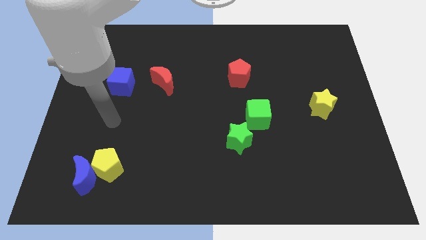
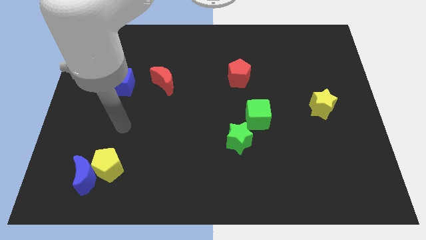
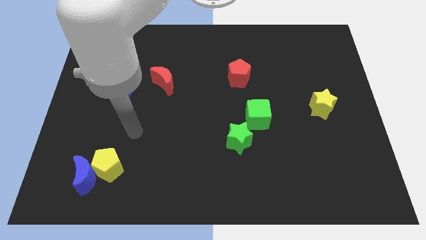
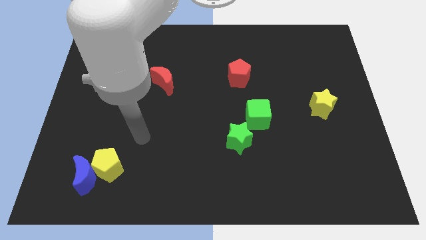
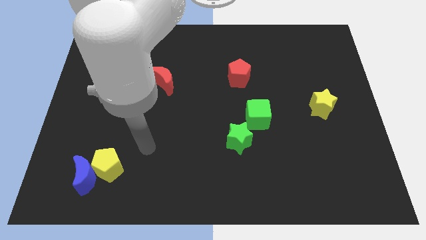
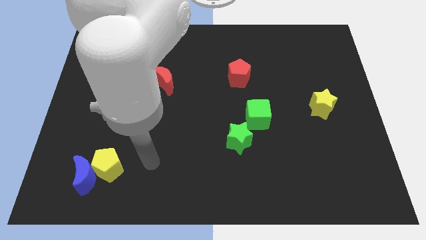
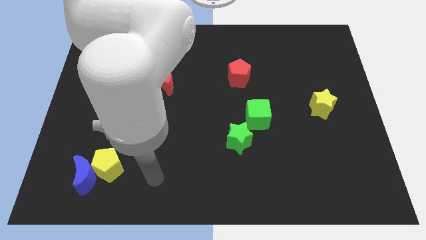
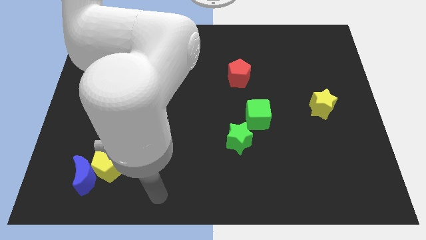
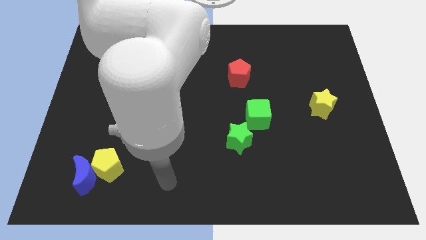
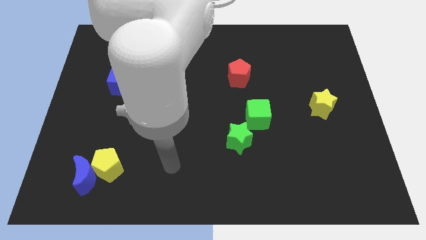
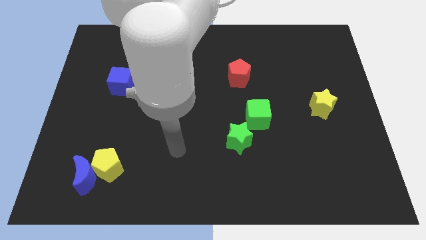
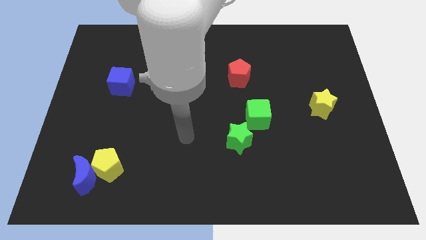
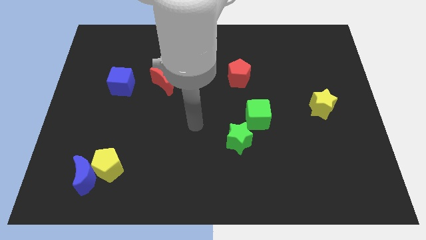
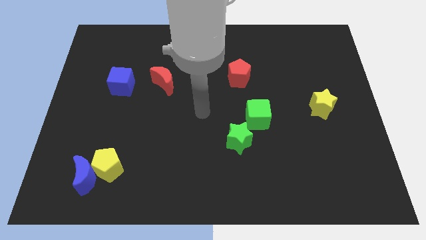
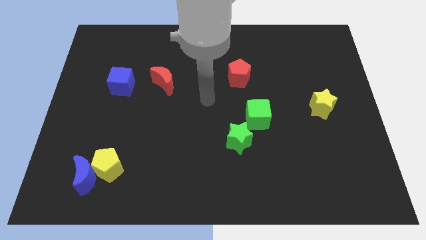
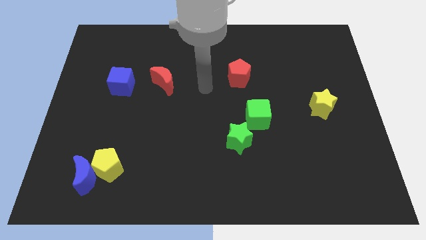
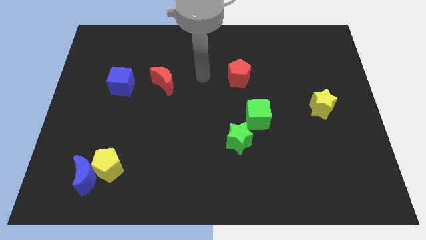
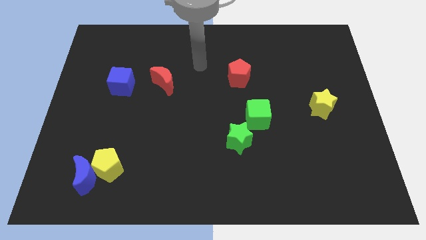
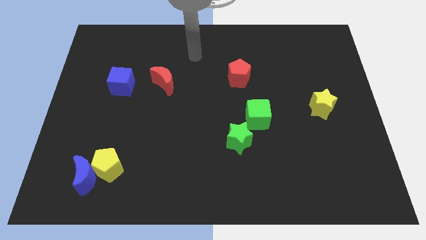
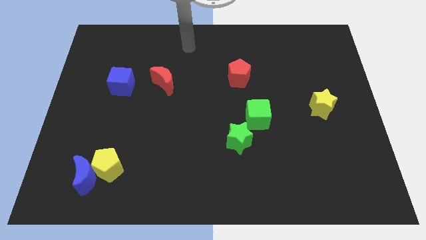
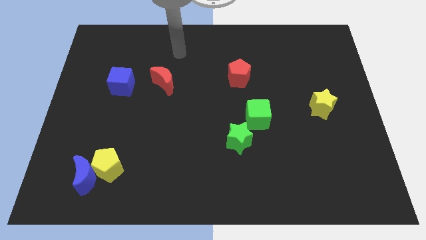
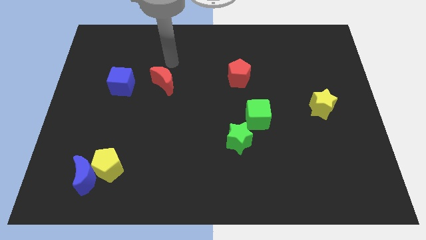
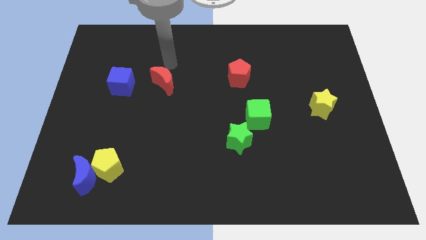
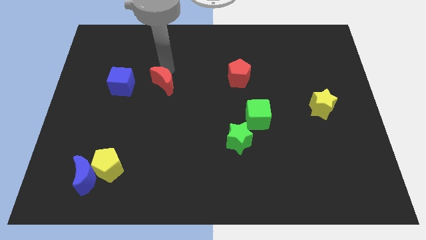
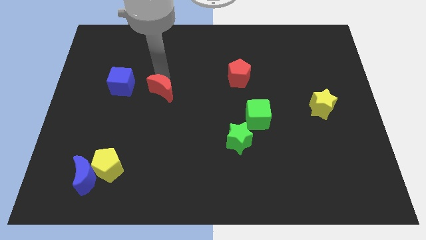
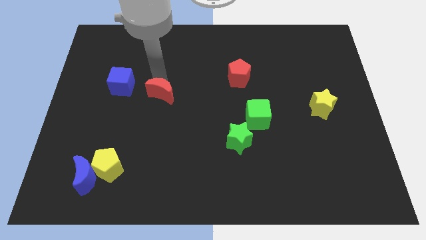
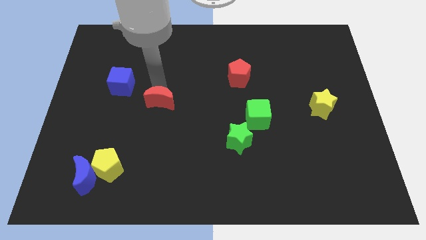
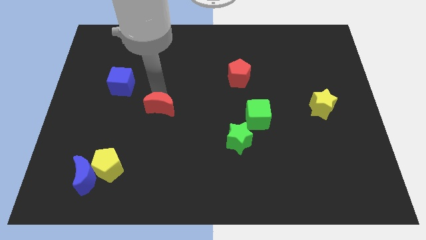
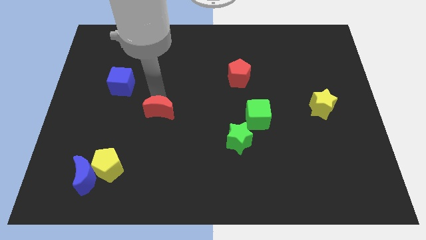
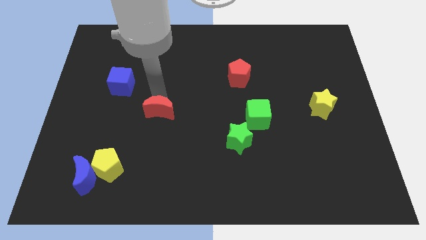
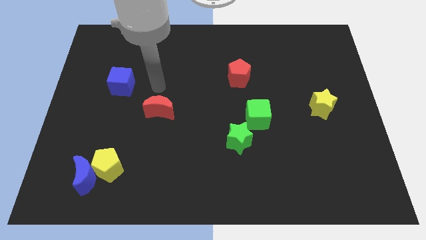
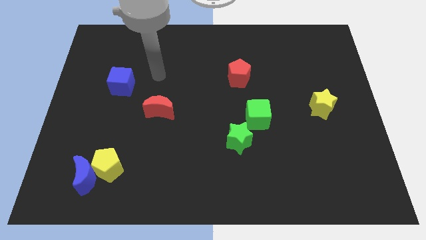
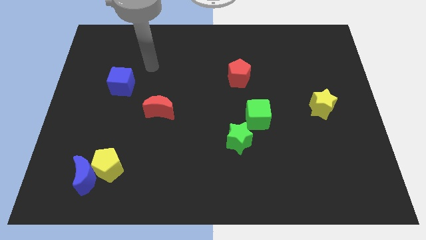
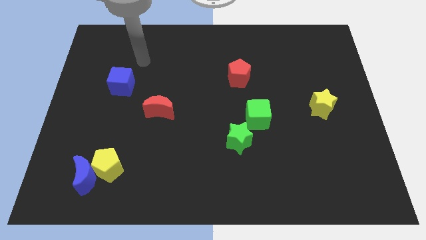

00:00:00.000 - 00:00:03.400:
move the red crescent to the bottom right of the blue cube

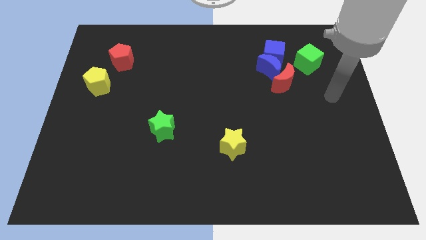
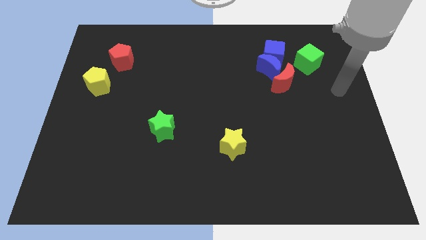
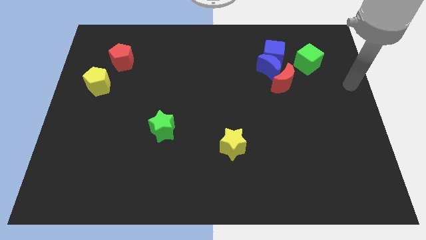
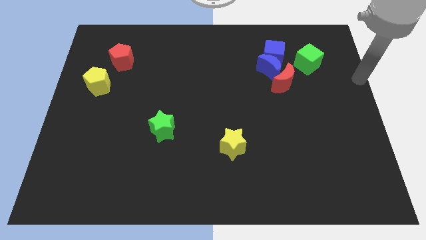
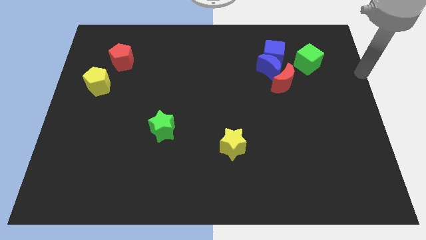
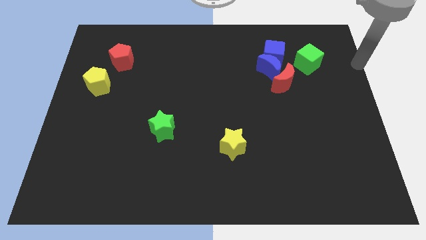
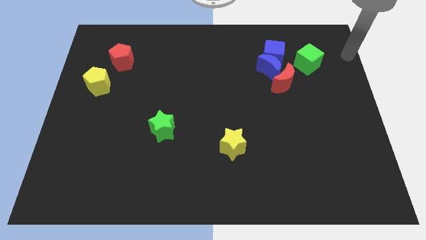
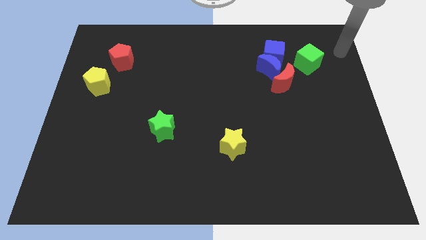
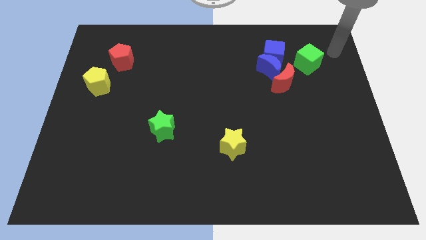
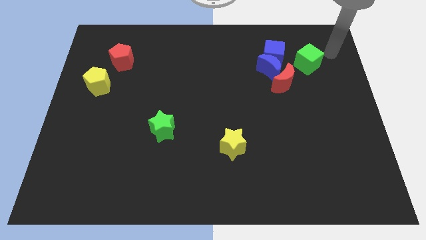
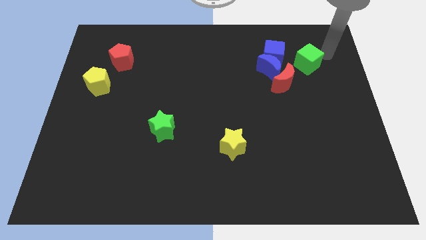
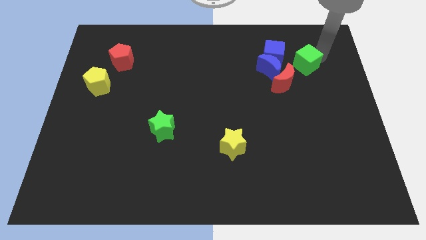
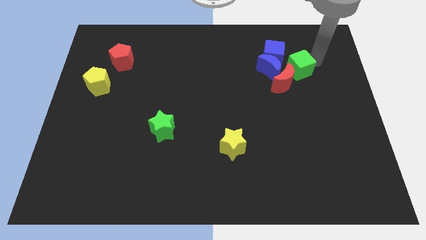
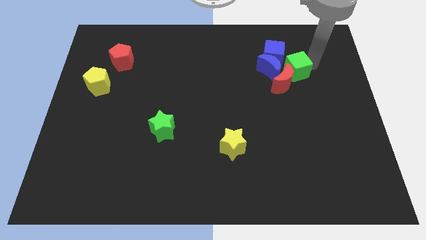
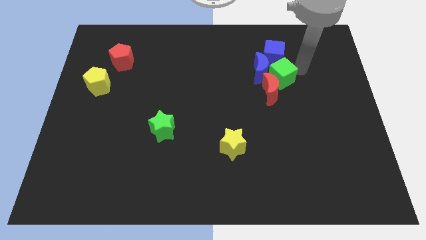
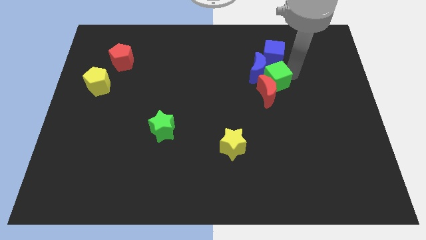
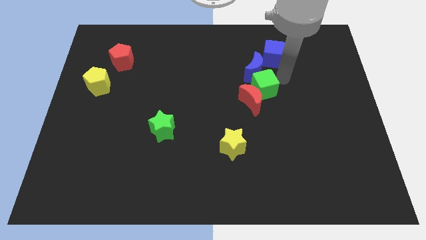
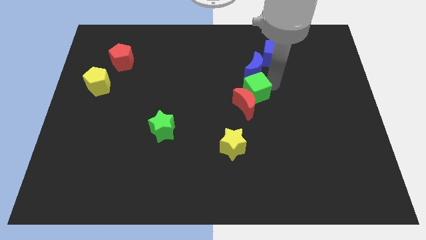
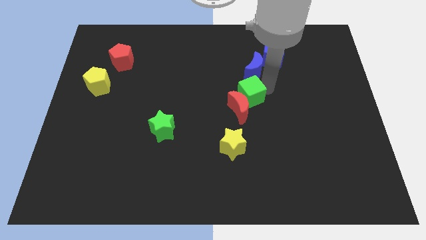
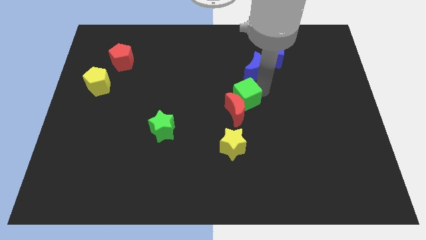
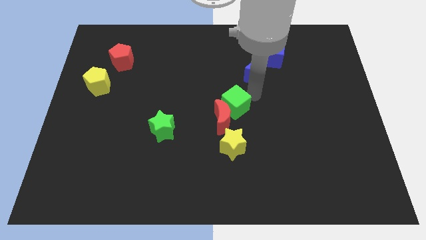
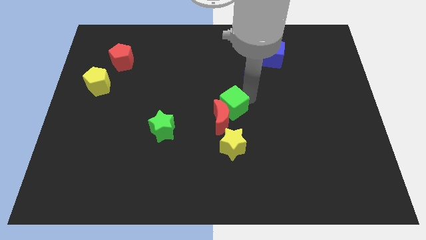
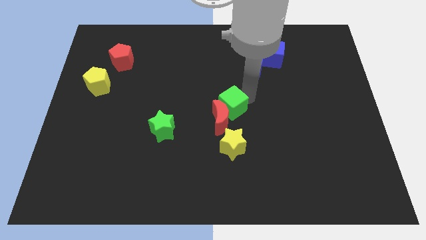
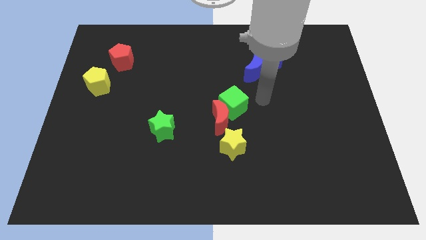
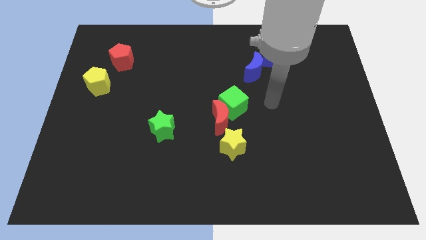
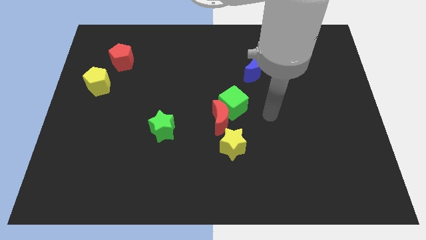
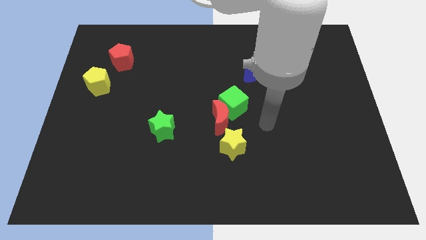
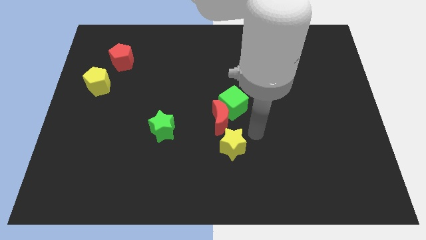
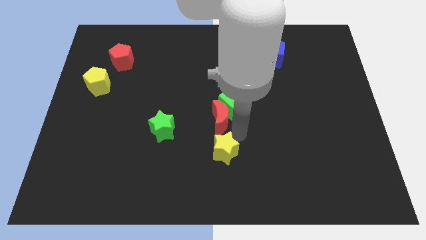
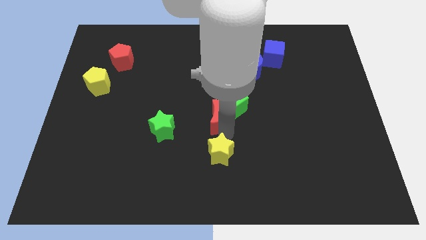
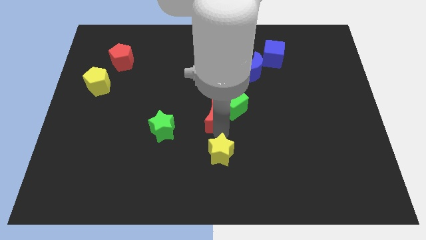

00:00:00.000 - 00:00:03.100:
push green cube to the center of the board

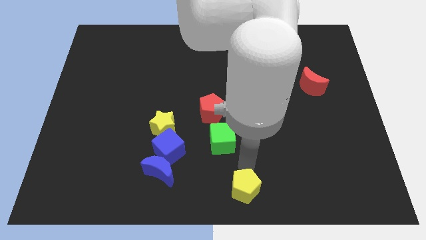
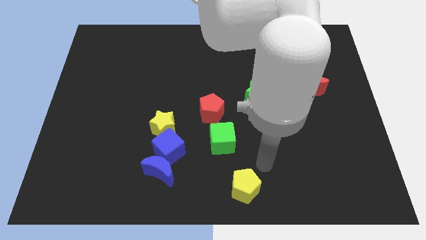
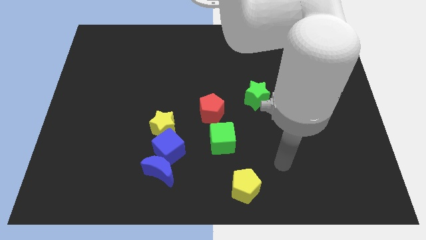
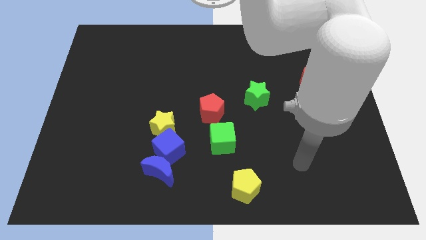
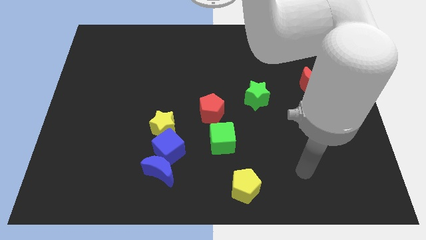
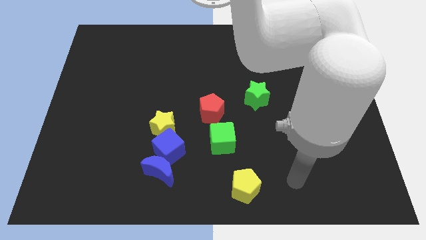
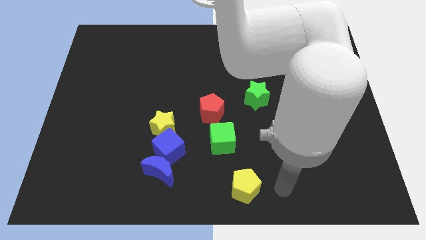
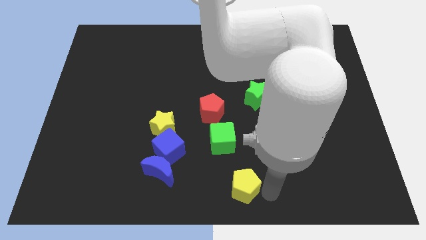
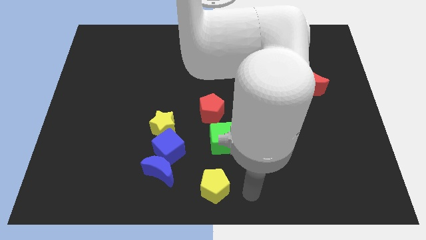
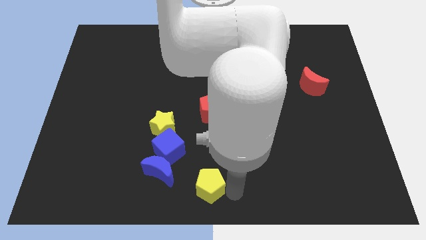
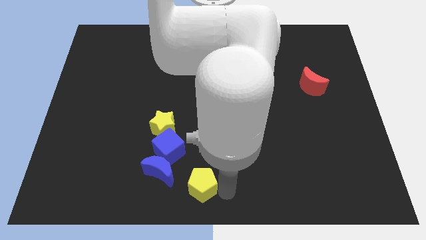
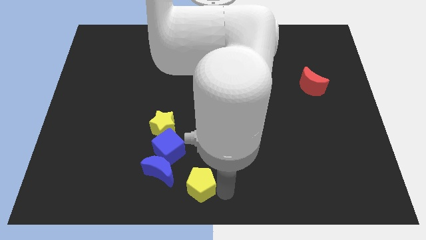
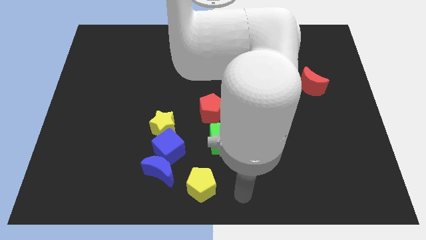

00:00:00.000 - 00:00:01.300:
slide the yellow pentagon towards the right side of the blue crescent

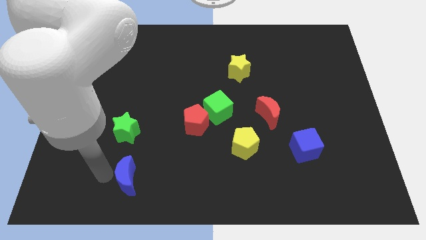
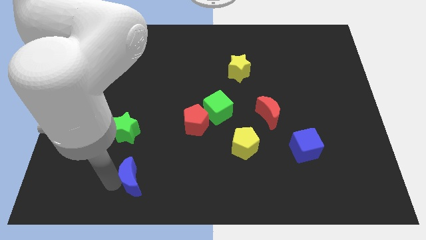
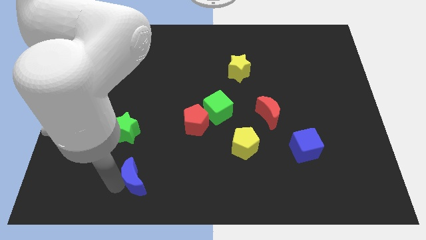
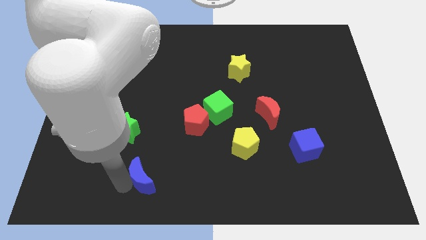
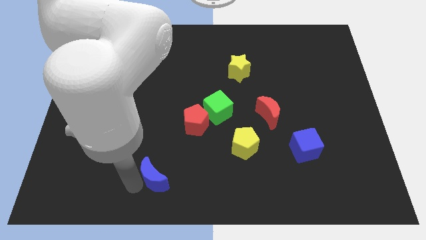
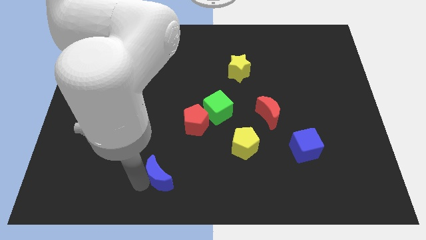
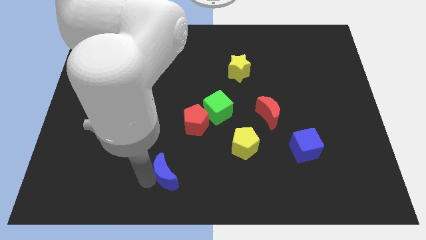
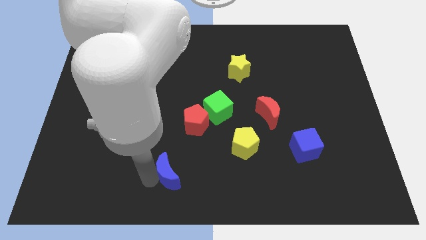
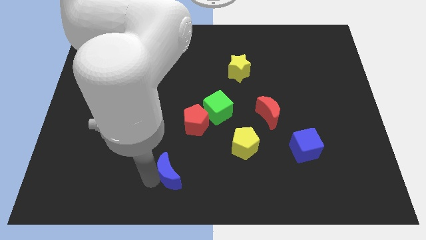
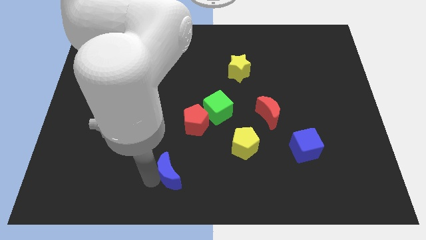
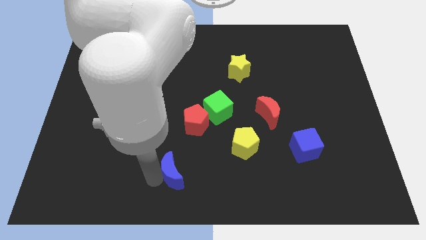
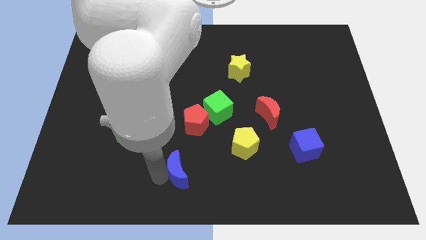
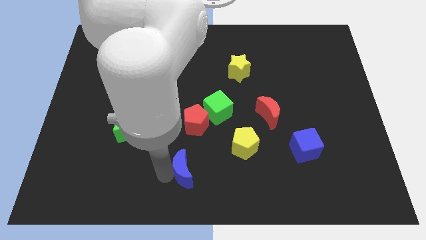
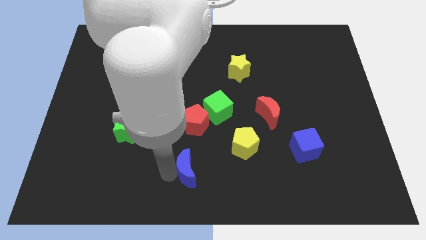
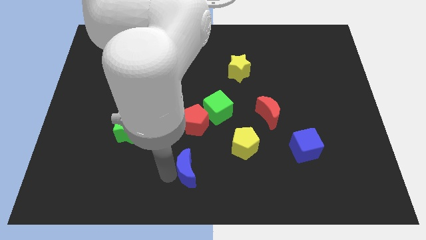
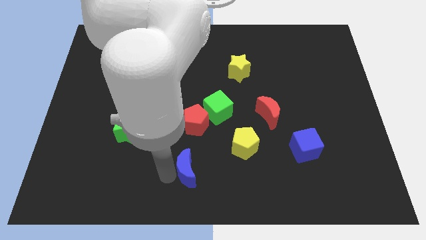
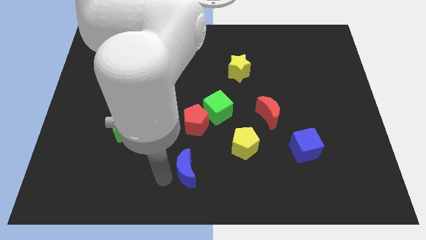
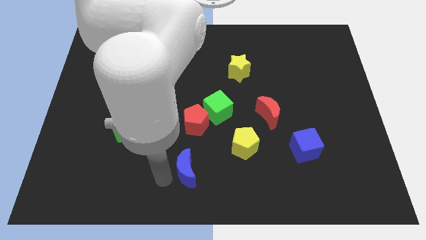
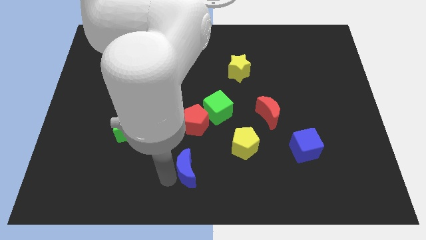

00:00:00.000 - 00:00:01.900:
move the blue moon to the right side slightly
